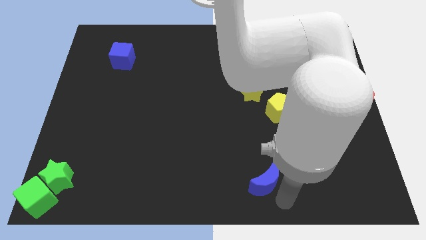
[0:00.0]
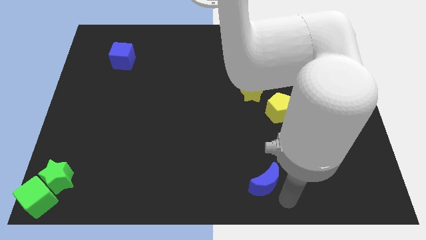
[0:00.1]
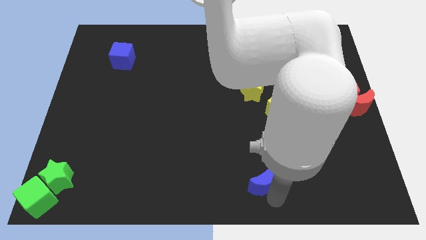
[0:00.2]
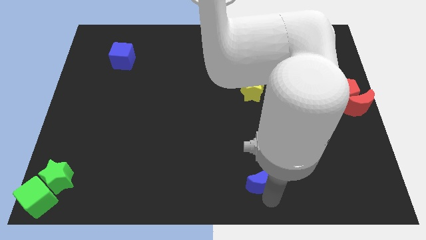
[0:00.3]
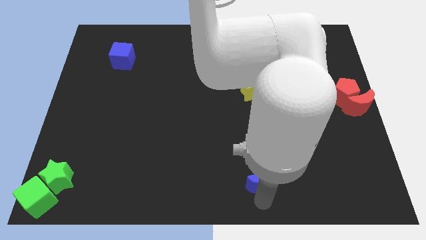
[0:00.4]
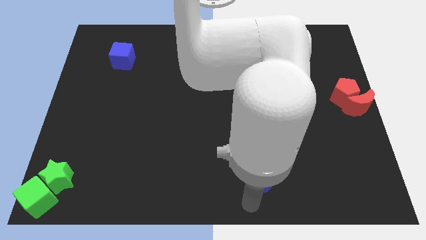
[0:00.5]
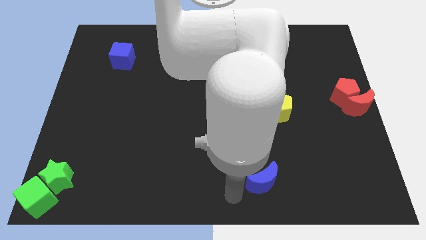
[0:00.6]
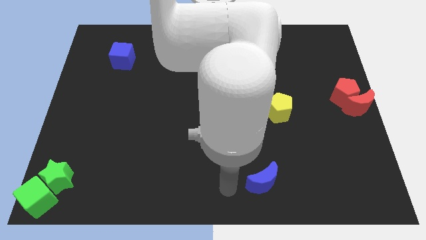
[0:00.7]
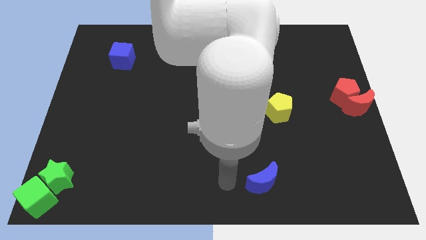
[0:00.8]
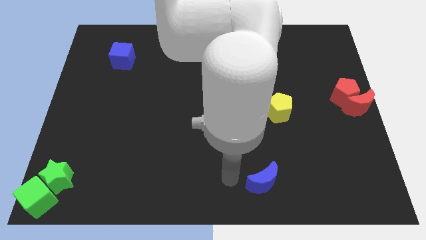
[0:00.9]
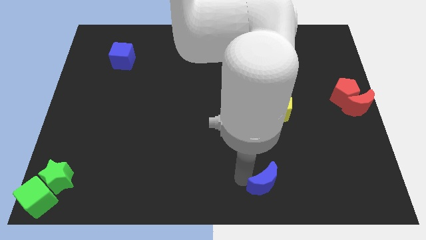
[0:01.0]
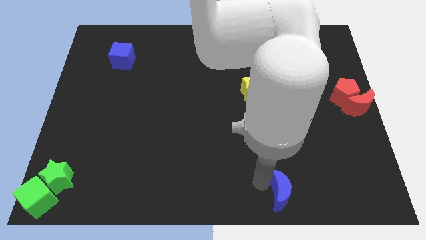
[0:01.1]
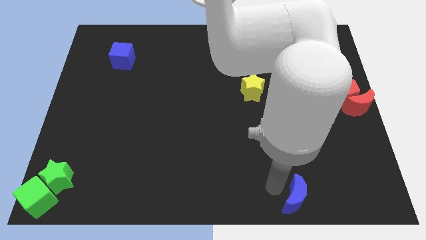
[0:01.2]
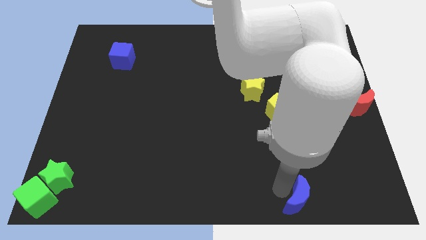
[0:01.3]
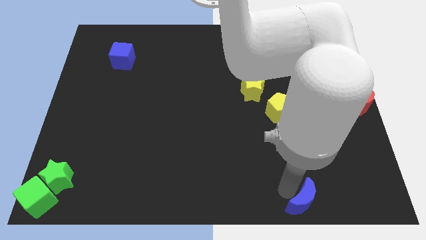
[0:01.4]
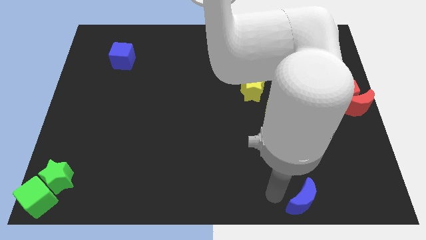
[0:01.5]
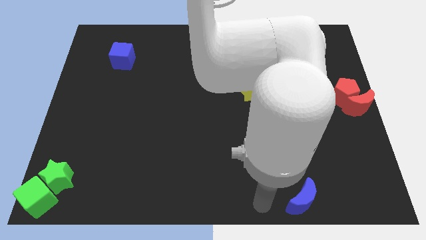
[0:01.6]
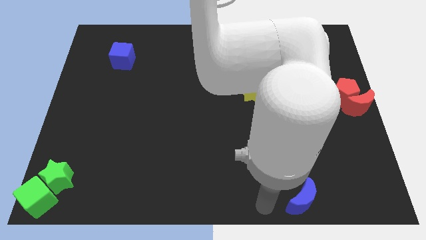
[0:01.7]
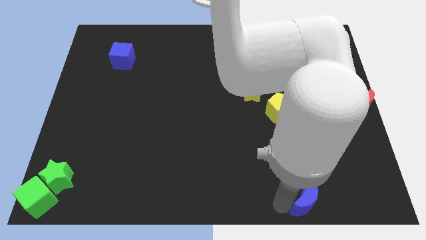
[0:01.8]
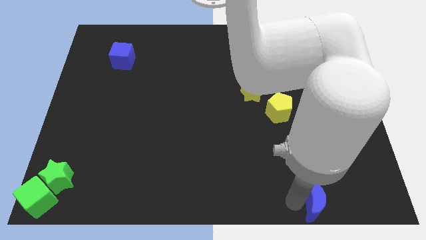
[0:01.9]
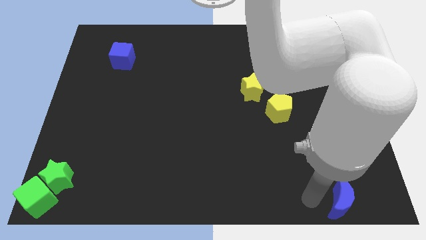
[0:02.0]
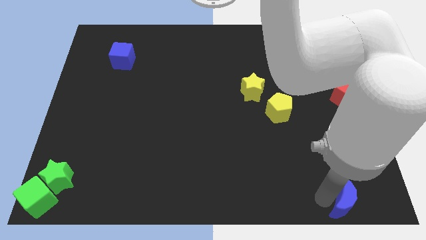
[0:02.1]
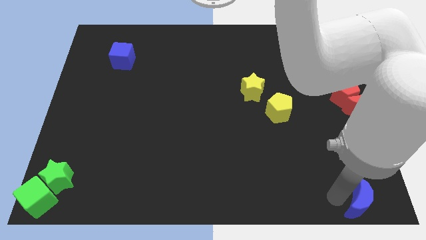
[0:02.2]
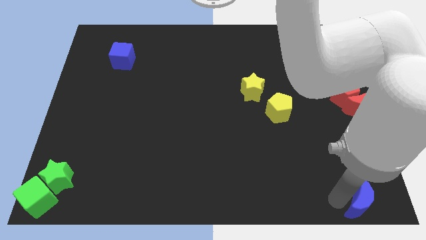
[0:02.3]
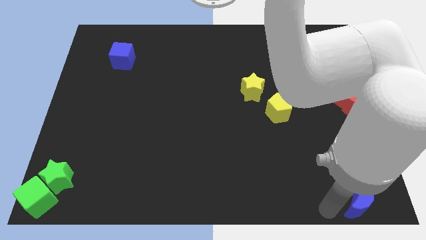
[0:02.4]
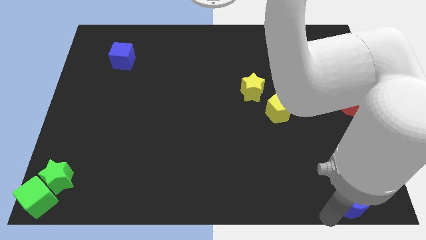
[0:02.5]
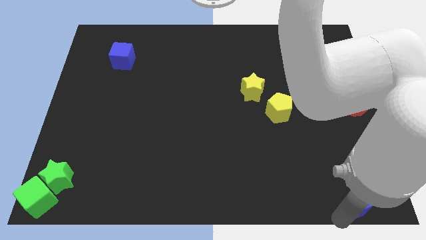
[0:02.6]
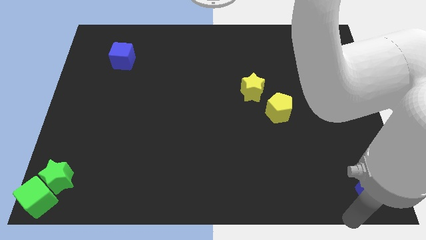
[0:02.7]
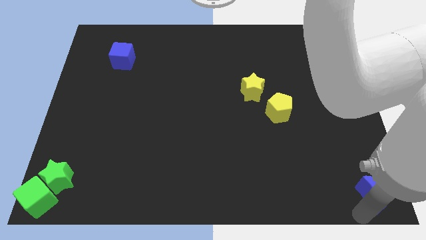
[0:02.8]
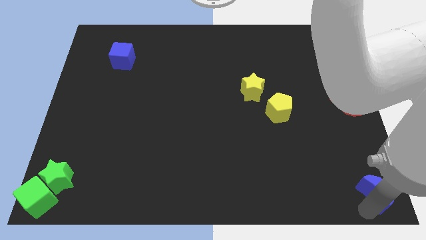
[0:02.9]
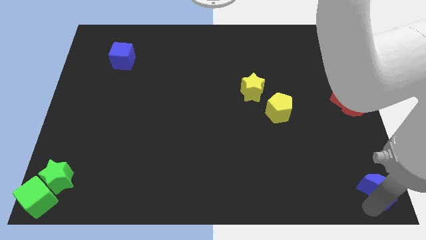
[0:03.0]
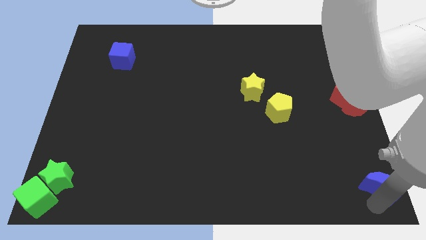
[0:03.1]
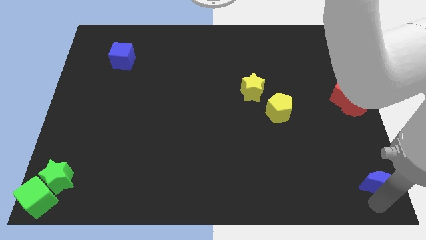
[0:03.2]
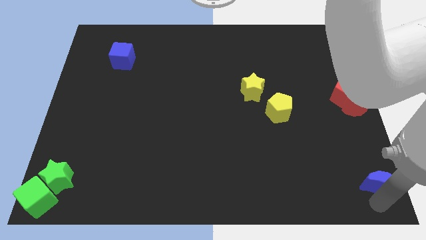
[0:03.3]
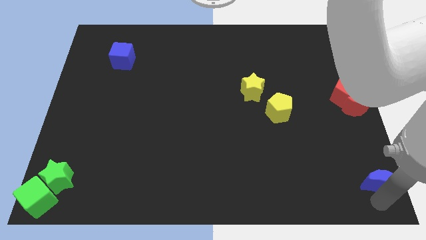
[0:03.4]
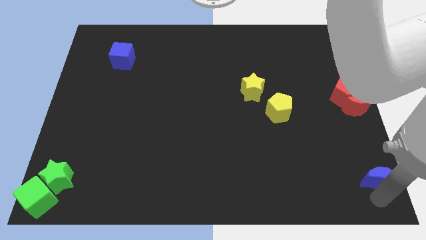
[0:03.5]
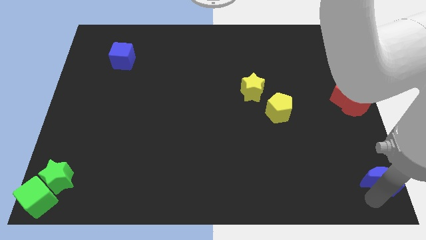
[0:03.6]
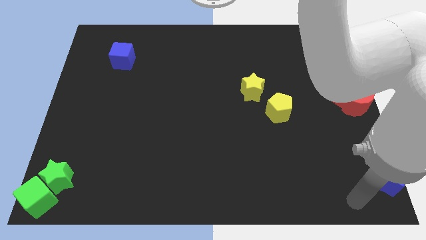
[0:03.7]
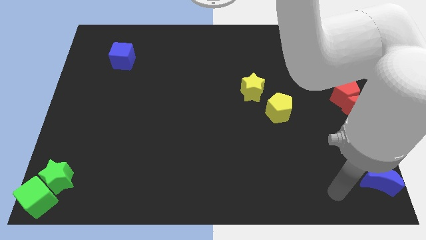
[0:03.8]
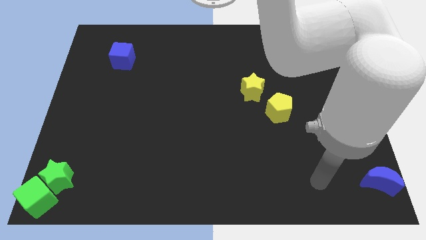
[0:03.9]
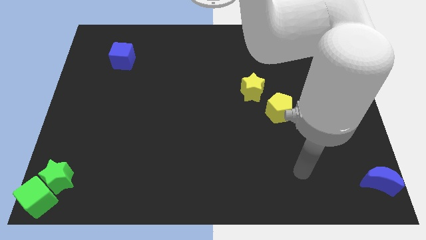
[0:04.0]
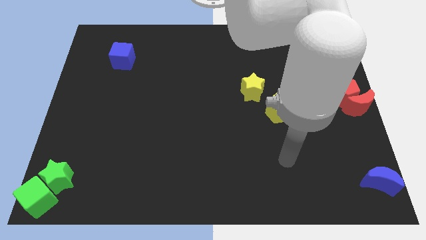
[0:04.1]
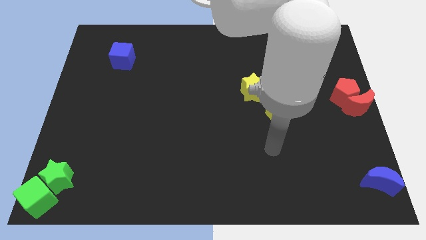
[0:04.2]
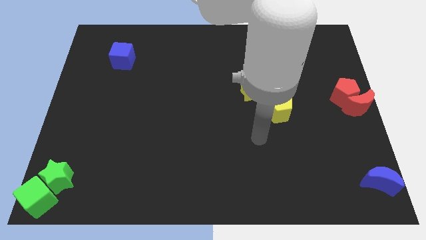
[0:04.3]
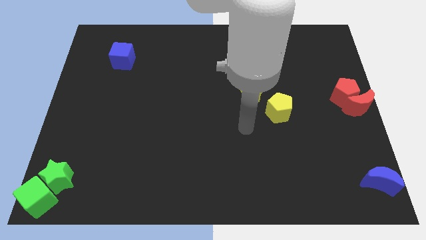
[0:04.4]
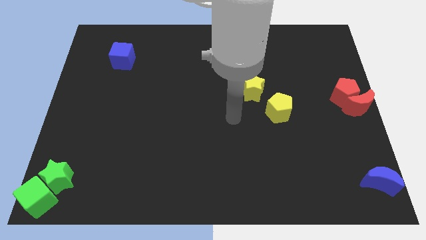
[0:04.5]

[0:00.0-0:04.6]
place the blue crescent vertically below the red blocks

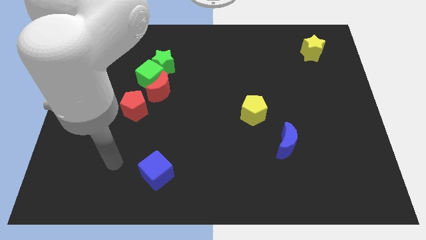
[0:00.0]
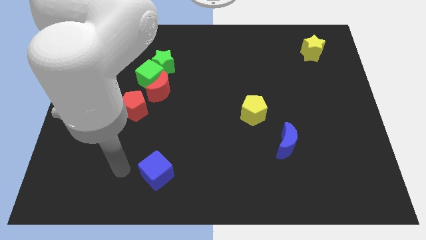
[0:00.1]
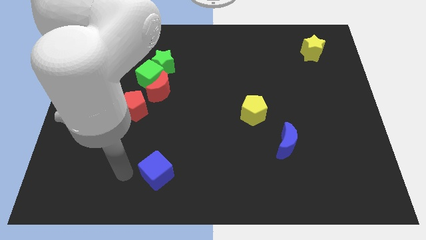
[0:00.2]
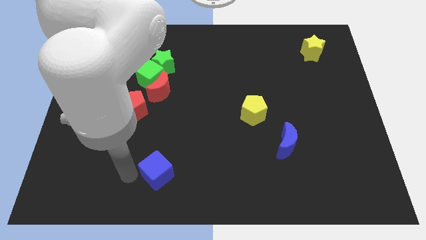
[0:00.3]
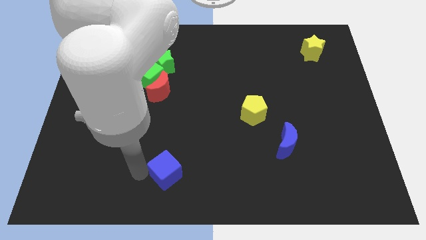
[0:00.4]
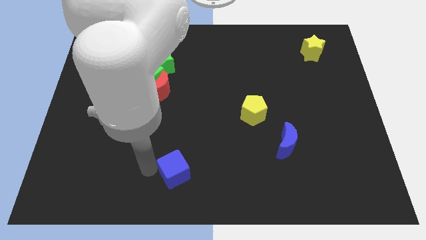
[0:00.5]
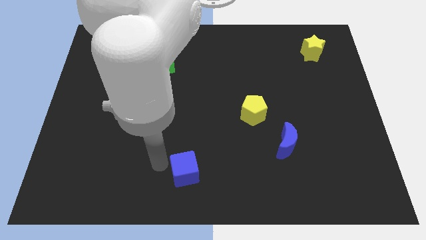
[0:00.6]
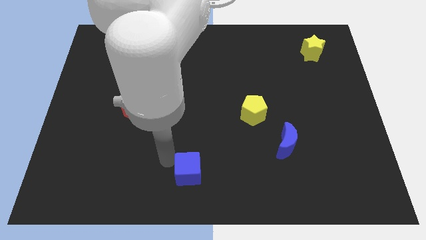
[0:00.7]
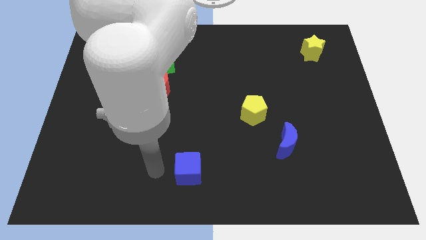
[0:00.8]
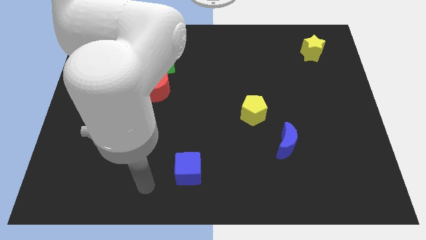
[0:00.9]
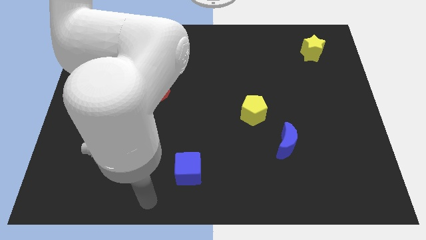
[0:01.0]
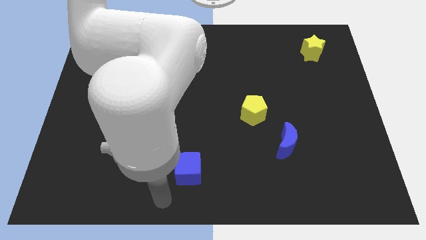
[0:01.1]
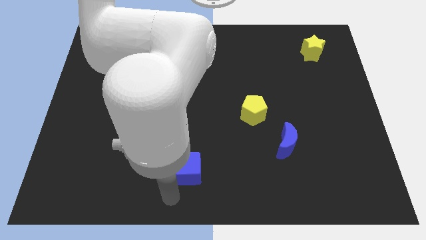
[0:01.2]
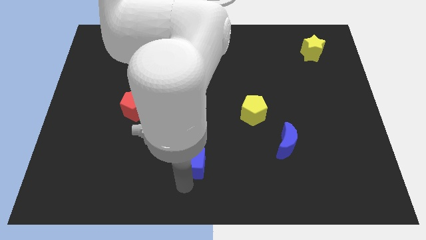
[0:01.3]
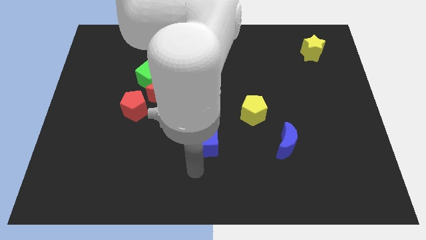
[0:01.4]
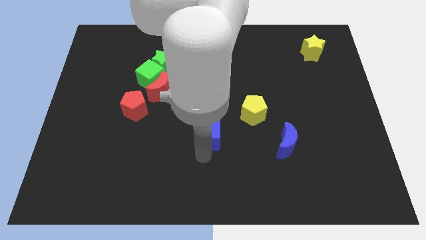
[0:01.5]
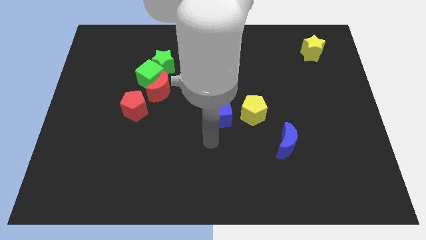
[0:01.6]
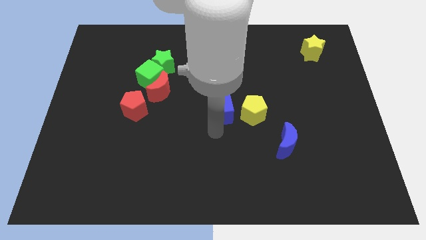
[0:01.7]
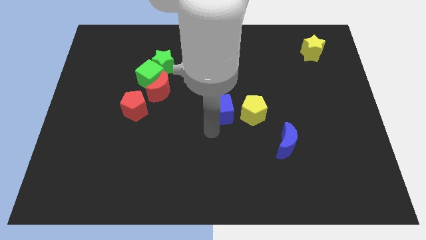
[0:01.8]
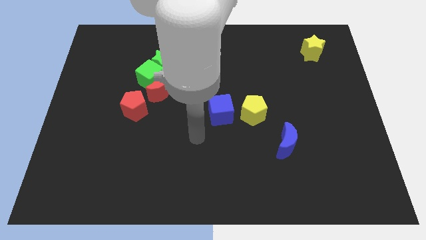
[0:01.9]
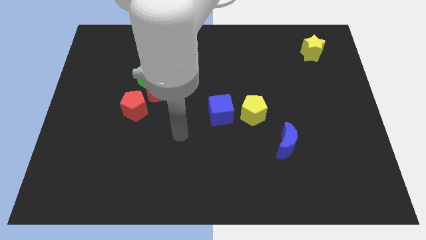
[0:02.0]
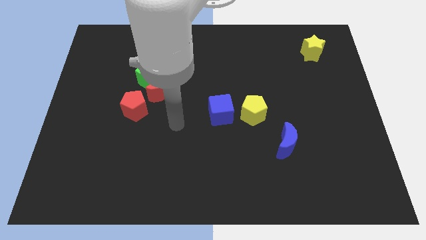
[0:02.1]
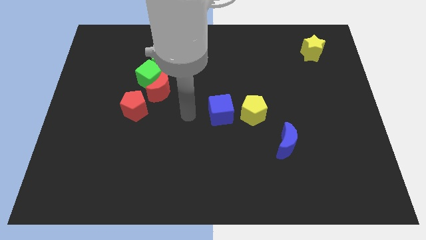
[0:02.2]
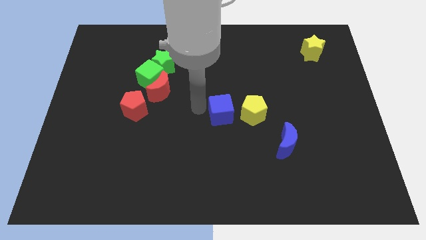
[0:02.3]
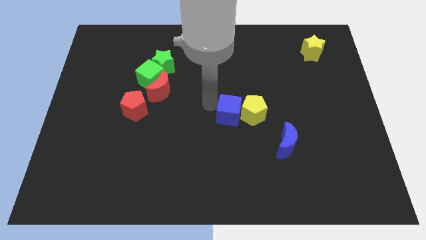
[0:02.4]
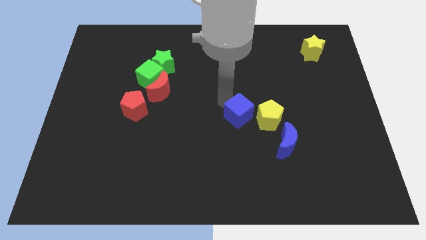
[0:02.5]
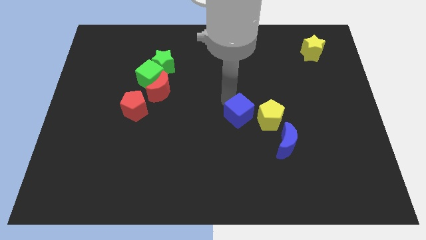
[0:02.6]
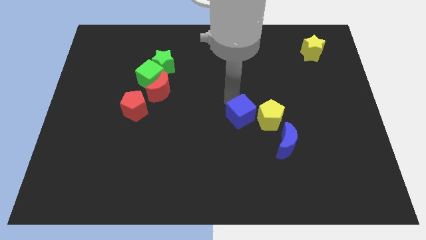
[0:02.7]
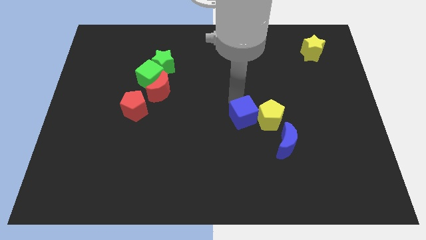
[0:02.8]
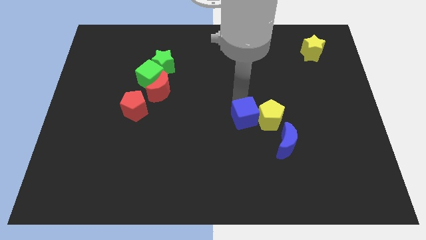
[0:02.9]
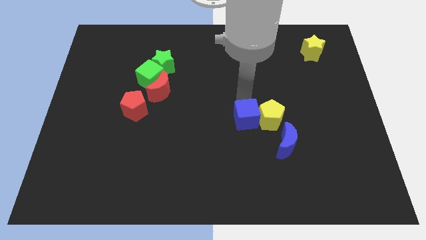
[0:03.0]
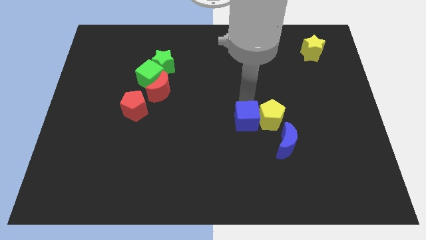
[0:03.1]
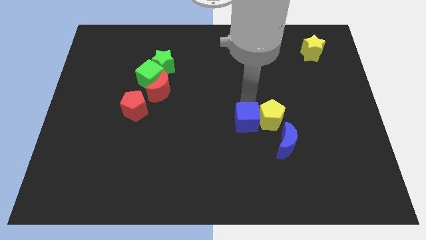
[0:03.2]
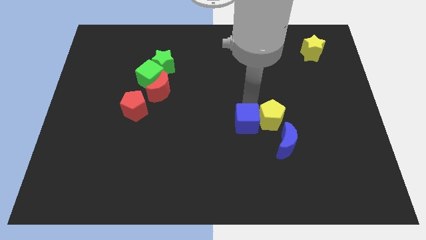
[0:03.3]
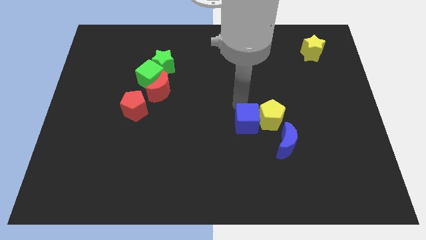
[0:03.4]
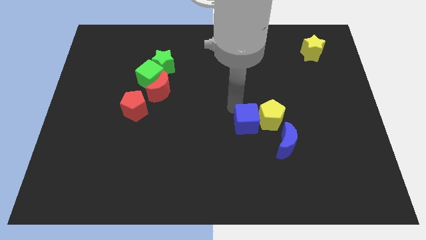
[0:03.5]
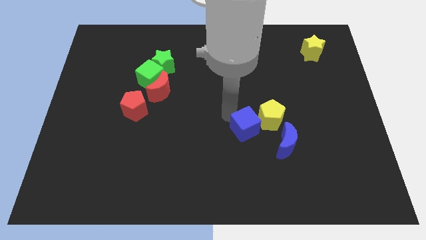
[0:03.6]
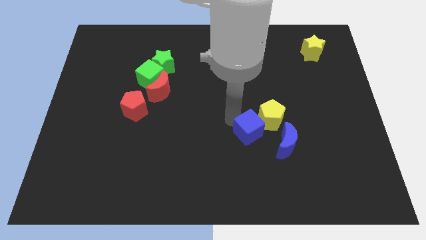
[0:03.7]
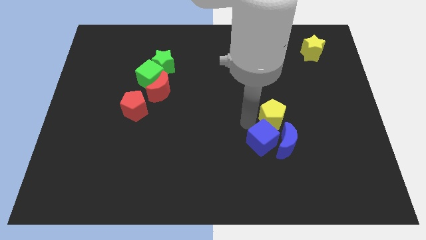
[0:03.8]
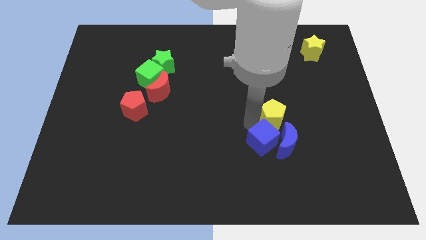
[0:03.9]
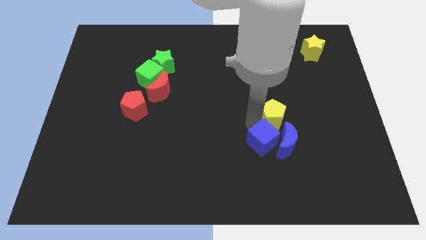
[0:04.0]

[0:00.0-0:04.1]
move blue cube close to blue moon

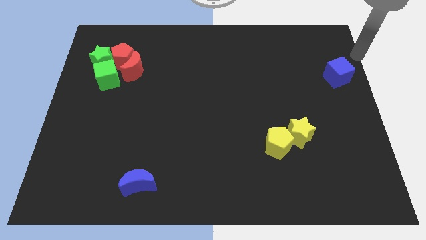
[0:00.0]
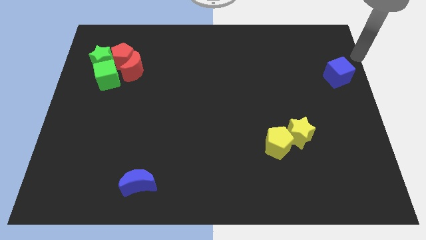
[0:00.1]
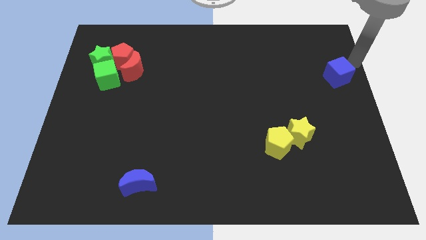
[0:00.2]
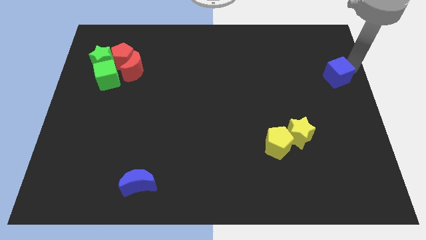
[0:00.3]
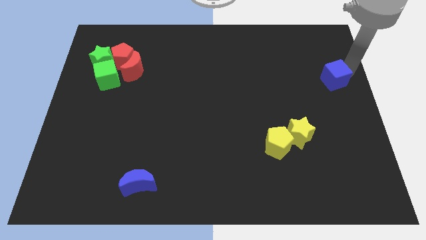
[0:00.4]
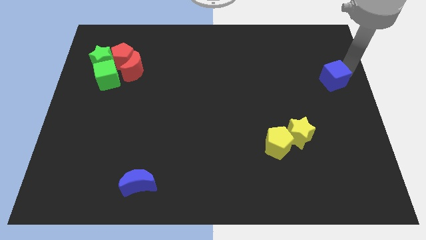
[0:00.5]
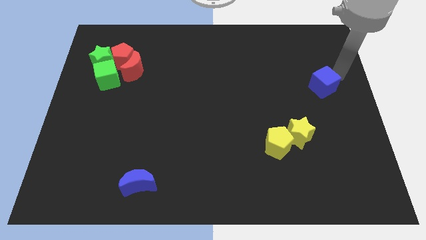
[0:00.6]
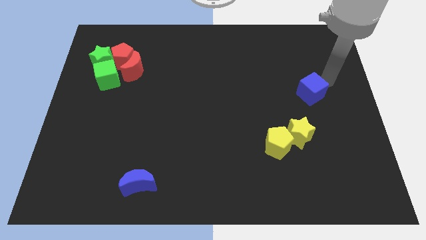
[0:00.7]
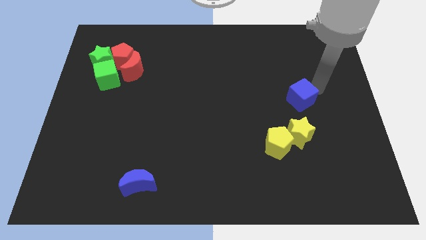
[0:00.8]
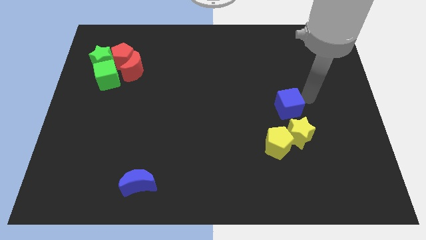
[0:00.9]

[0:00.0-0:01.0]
push the blue cube to the top of the yellow star
